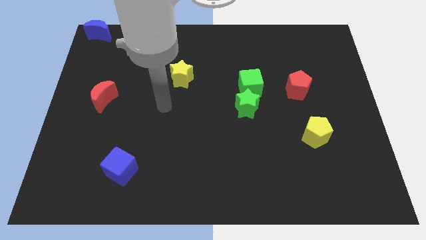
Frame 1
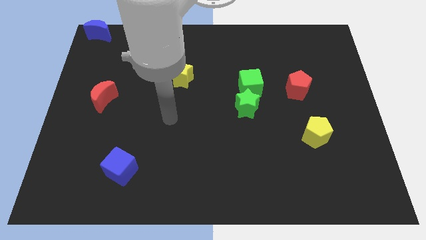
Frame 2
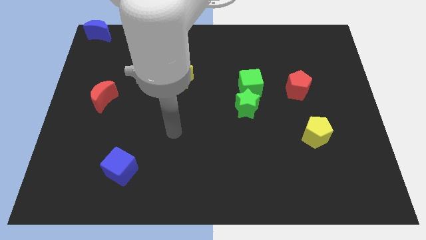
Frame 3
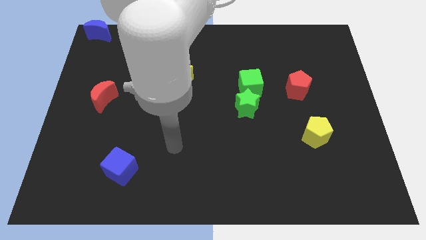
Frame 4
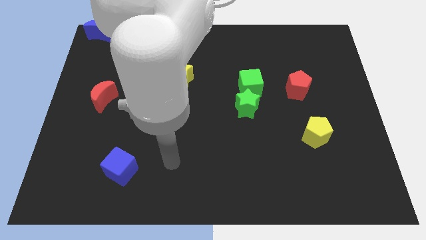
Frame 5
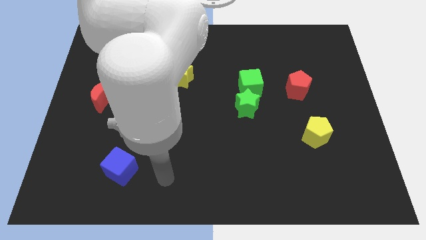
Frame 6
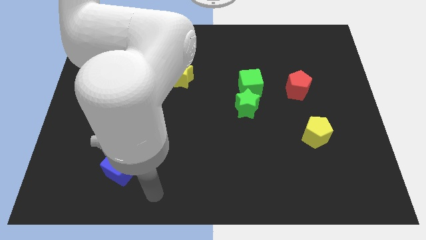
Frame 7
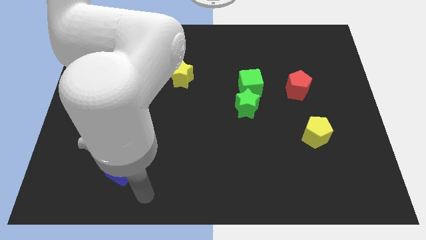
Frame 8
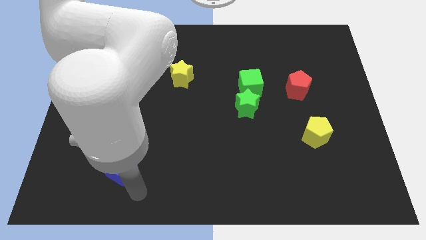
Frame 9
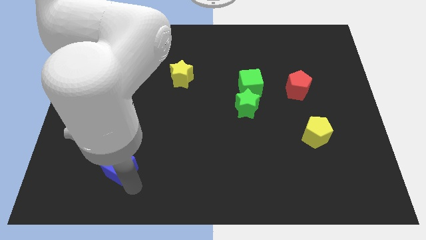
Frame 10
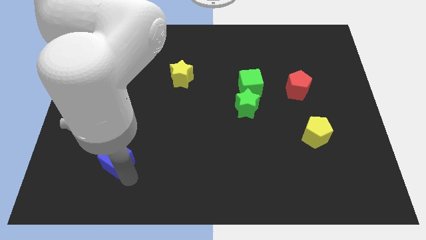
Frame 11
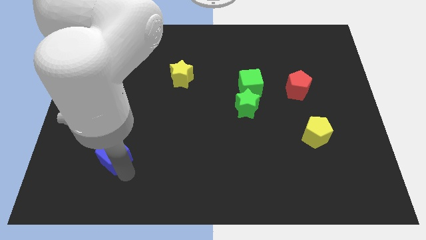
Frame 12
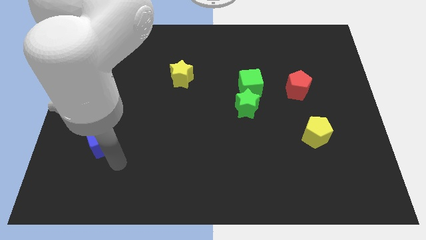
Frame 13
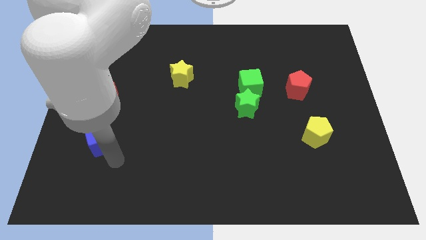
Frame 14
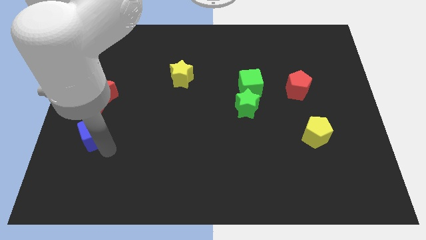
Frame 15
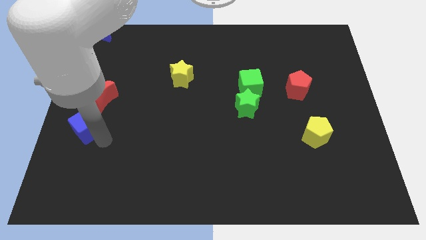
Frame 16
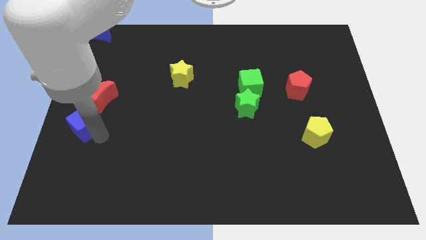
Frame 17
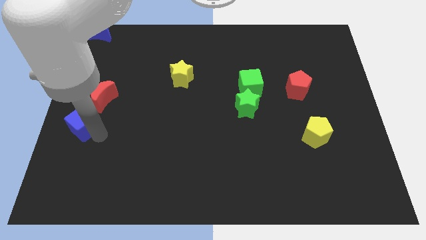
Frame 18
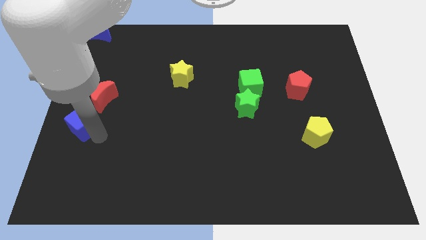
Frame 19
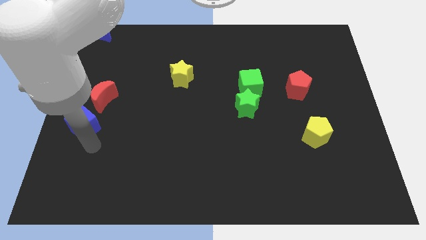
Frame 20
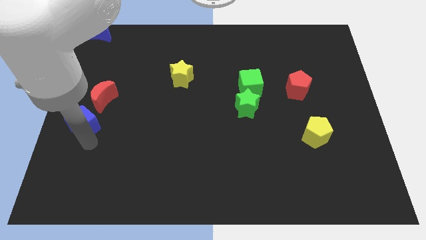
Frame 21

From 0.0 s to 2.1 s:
push the blue cube to the bottom left of the red crescent

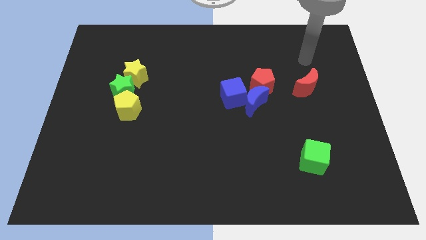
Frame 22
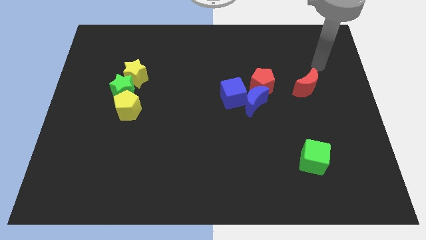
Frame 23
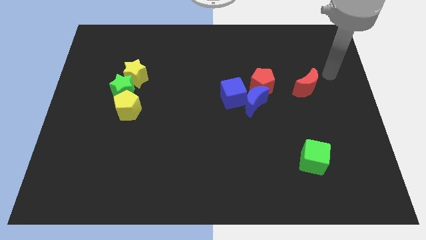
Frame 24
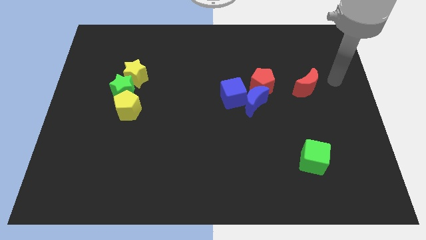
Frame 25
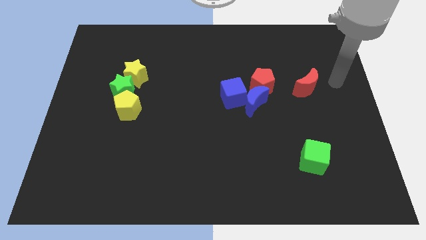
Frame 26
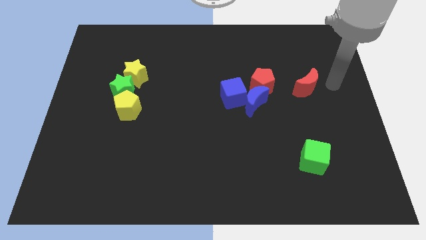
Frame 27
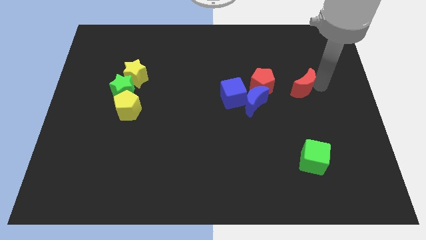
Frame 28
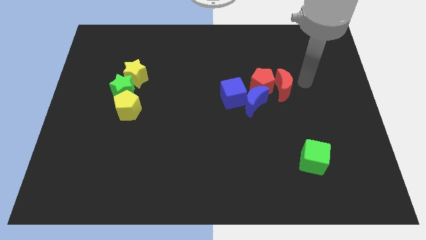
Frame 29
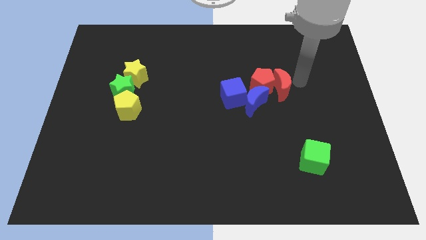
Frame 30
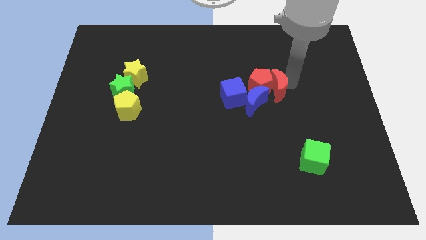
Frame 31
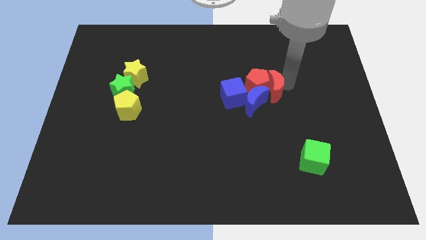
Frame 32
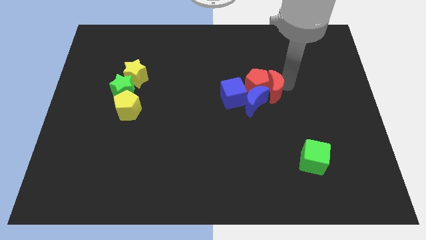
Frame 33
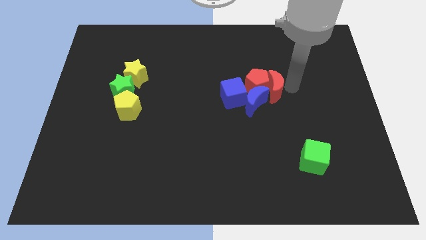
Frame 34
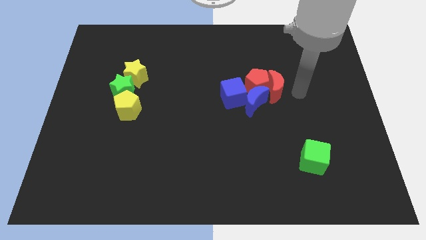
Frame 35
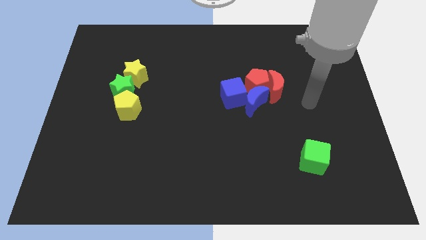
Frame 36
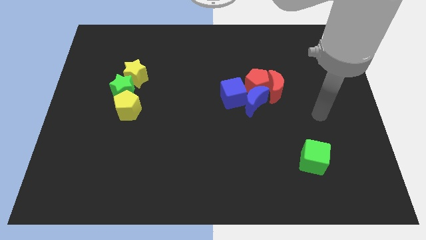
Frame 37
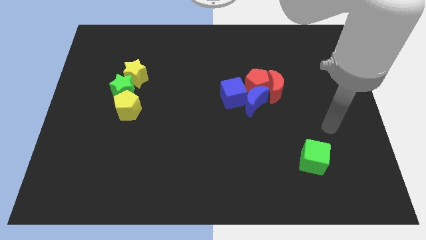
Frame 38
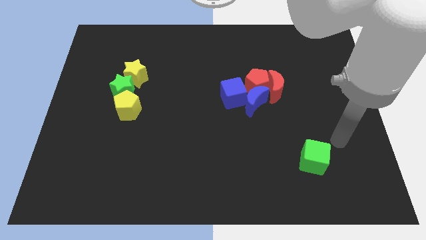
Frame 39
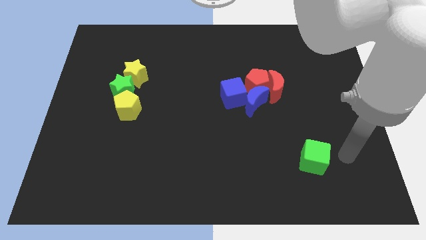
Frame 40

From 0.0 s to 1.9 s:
push the red moon into the red pentagon

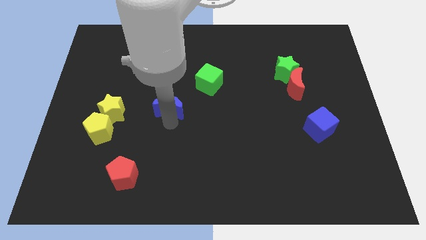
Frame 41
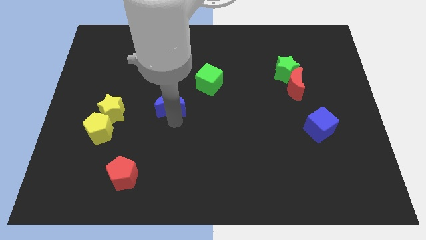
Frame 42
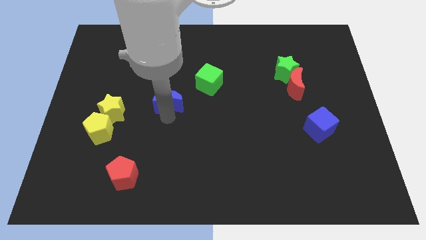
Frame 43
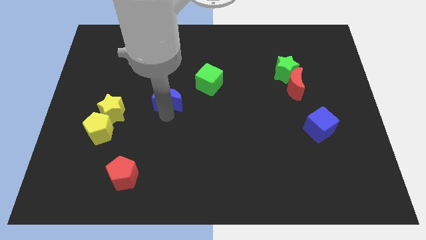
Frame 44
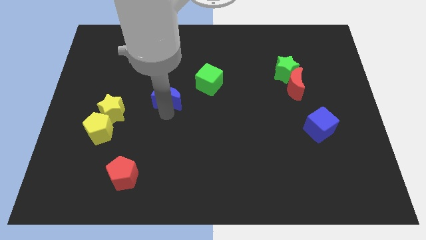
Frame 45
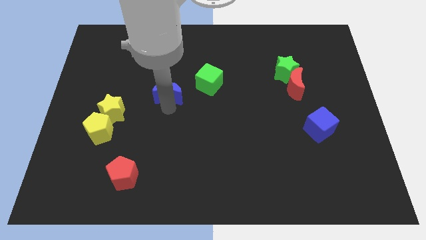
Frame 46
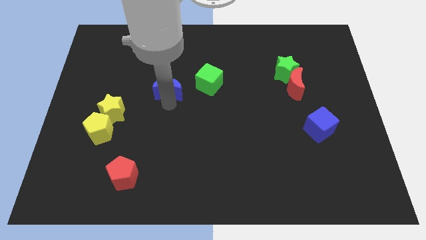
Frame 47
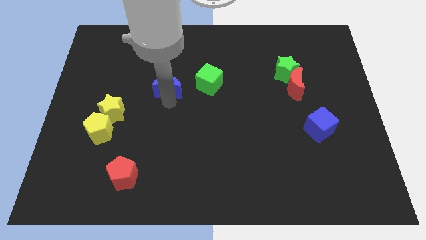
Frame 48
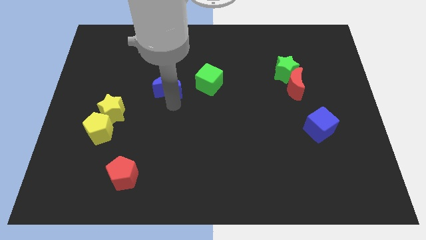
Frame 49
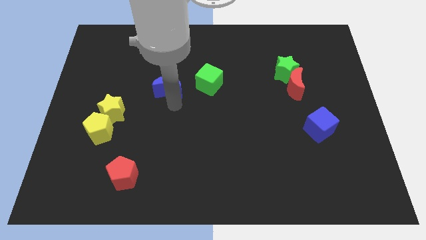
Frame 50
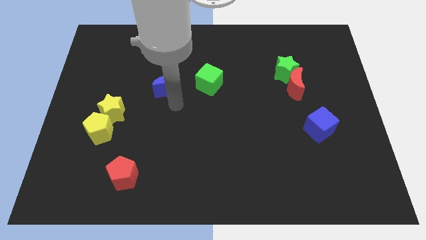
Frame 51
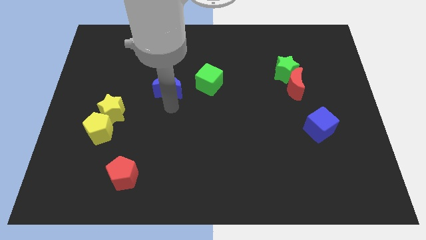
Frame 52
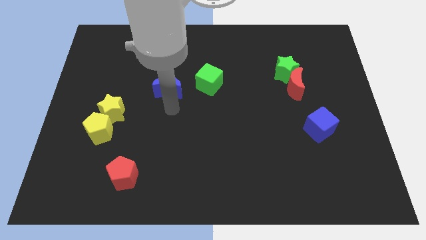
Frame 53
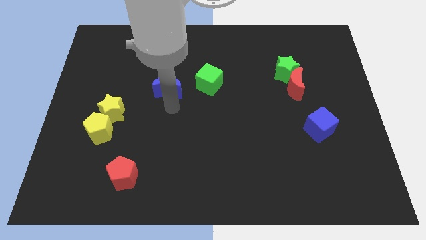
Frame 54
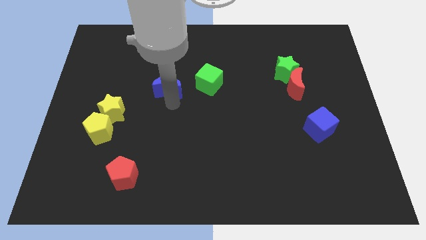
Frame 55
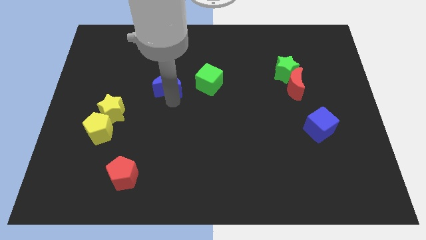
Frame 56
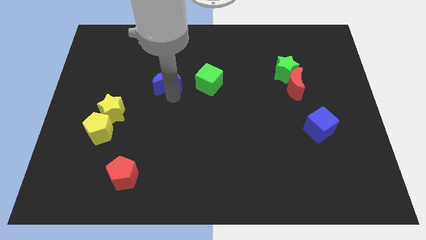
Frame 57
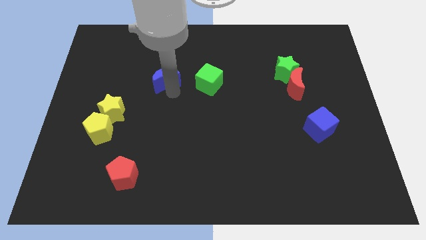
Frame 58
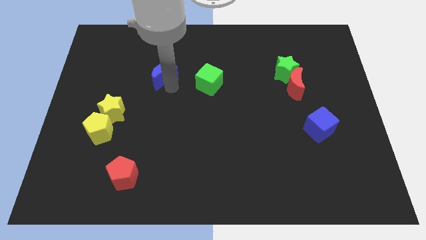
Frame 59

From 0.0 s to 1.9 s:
move the blue moon to the left side of the green cube

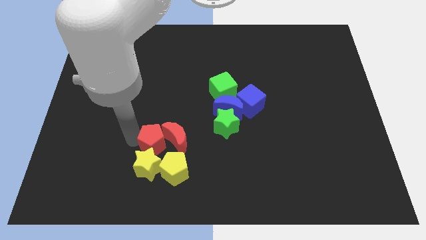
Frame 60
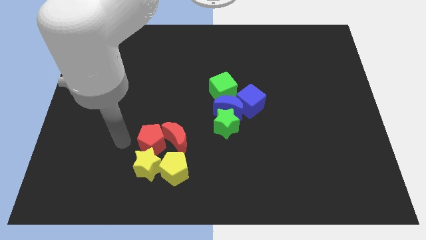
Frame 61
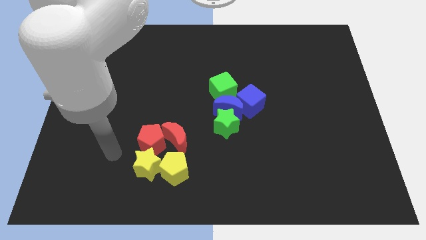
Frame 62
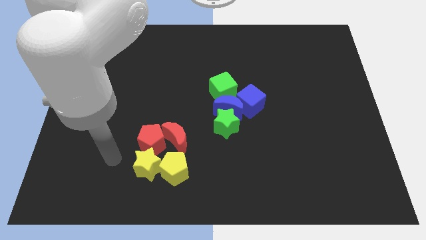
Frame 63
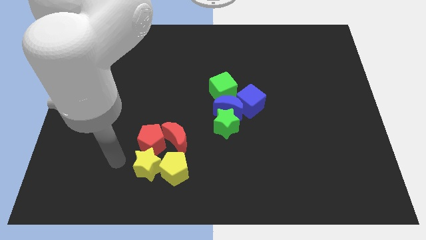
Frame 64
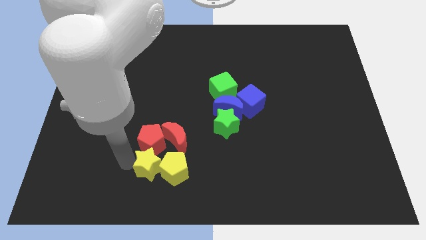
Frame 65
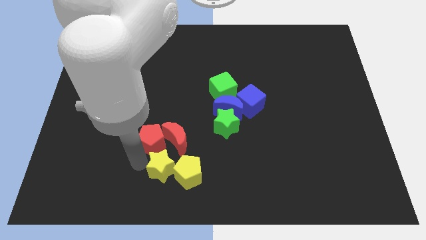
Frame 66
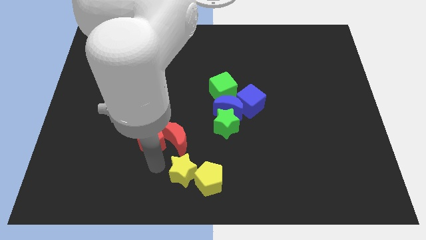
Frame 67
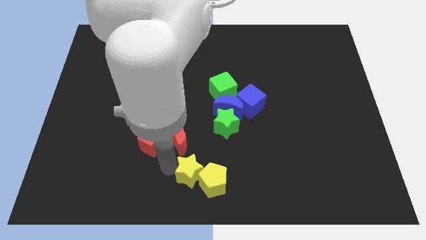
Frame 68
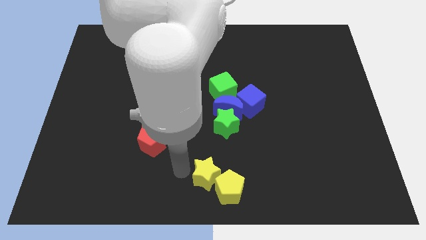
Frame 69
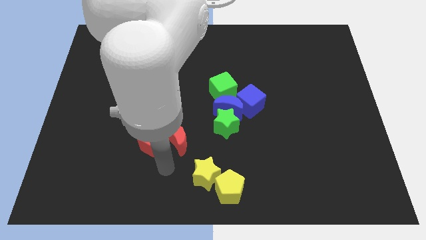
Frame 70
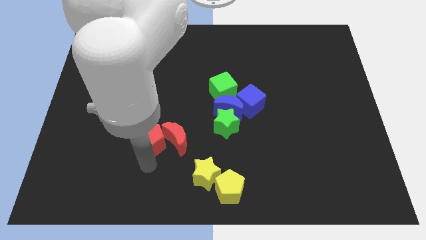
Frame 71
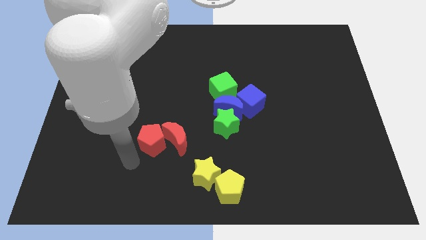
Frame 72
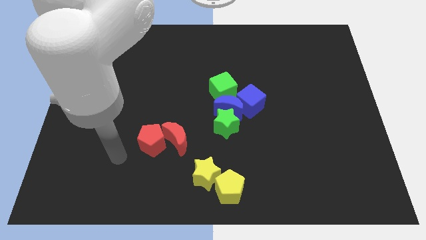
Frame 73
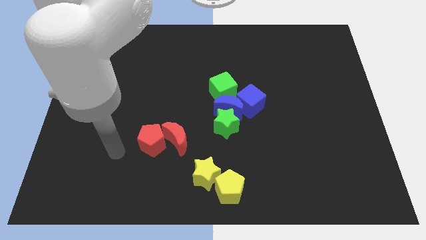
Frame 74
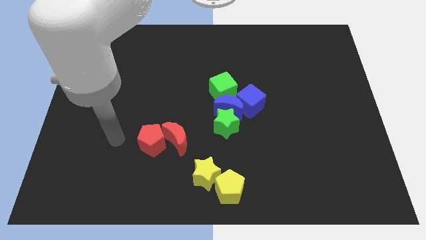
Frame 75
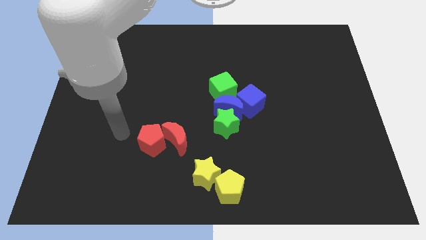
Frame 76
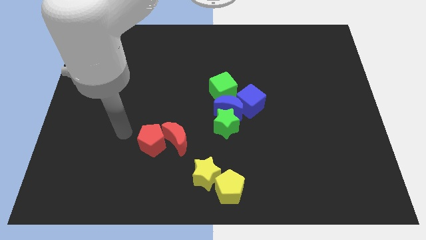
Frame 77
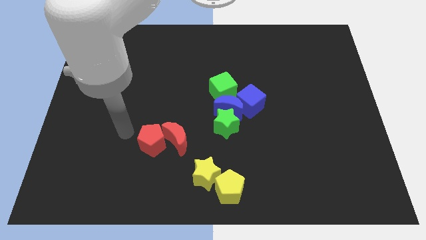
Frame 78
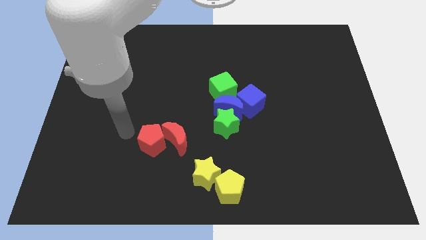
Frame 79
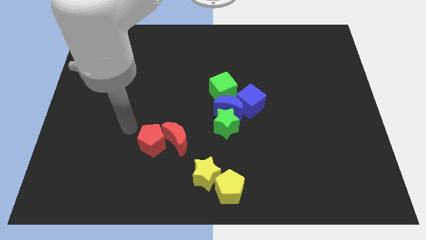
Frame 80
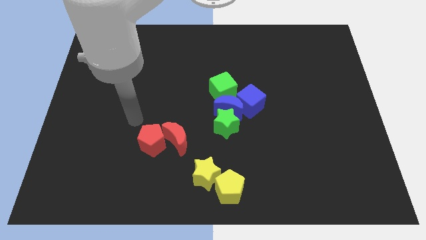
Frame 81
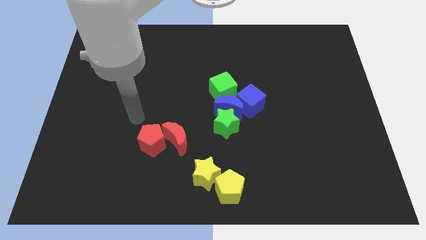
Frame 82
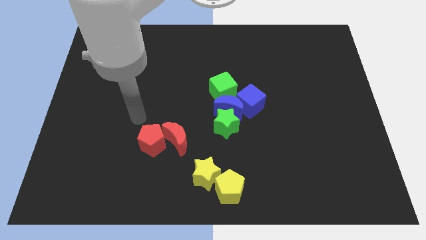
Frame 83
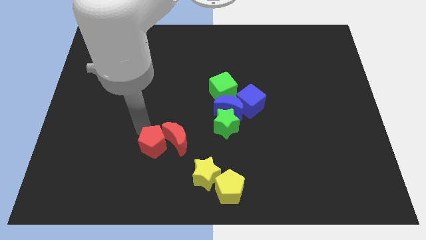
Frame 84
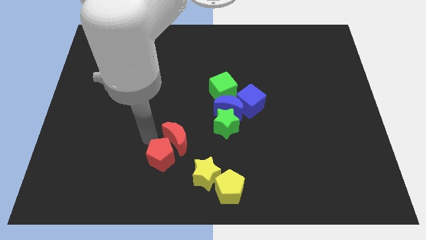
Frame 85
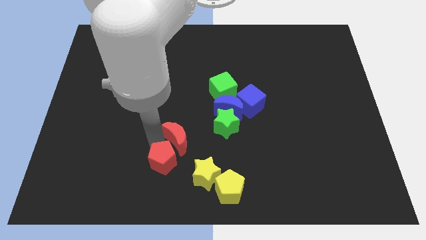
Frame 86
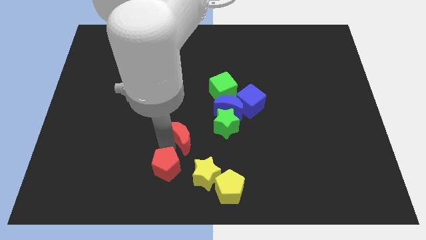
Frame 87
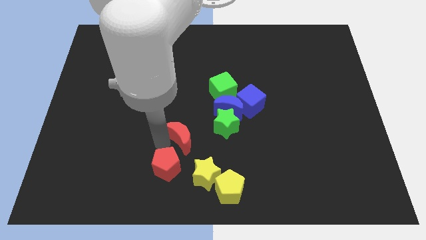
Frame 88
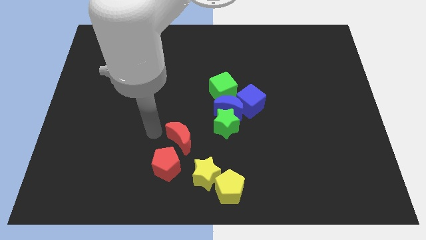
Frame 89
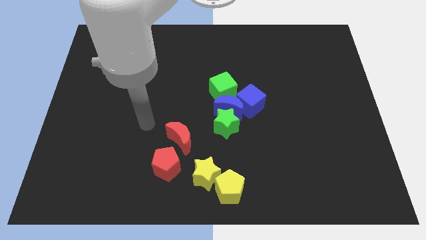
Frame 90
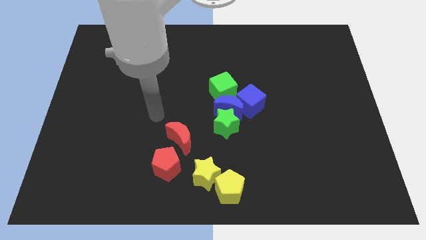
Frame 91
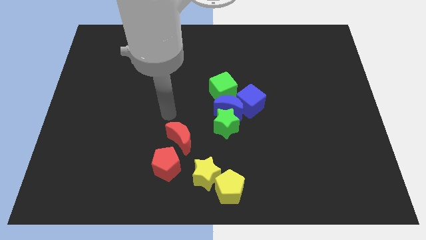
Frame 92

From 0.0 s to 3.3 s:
slide the yellow blocks to the center bottom of the board
